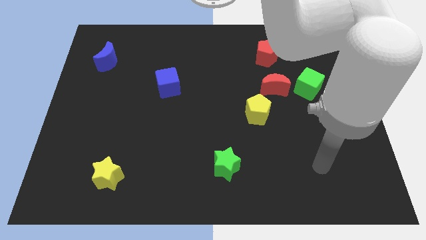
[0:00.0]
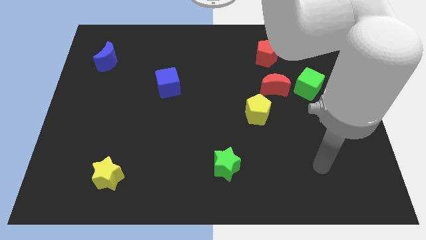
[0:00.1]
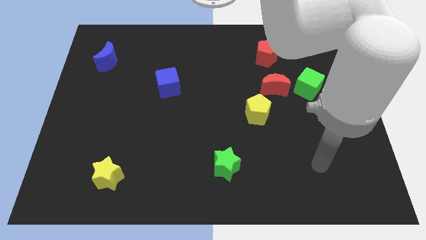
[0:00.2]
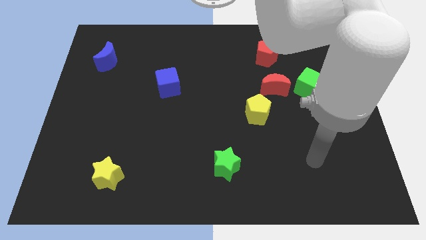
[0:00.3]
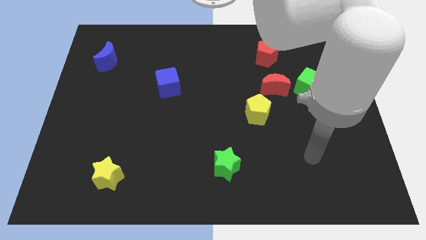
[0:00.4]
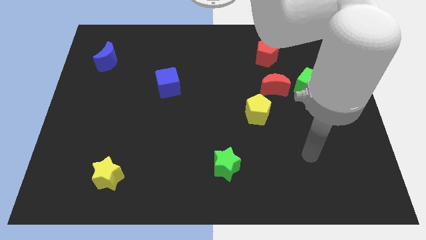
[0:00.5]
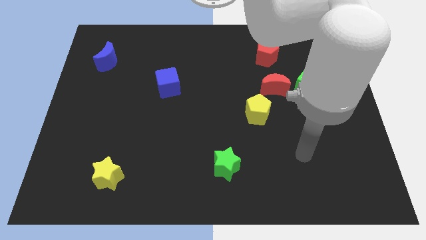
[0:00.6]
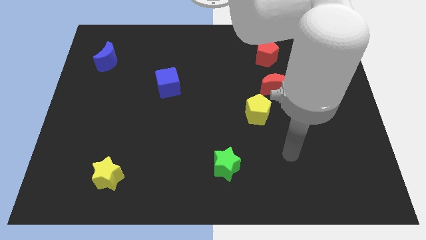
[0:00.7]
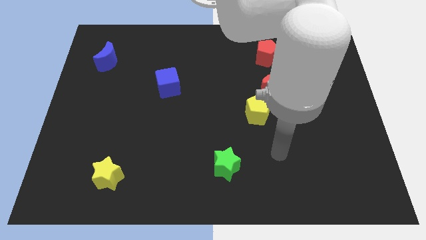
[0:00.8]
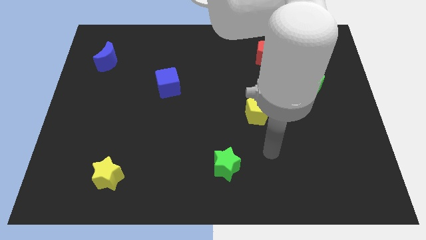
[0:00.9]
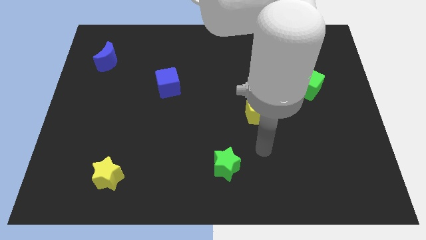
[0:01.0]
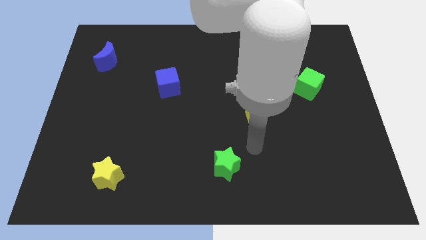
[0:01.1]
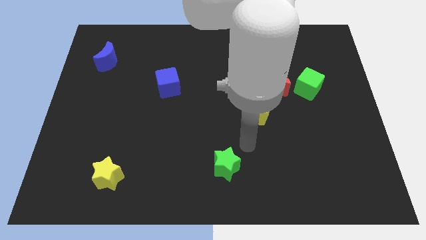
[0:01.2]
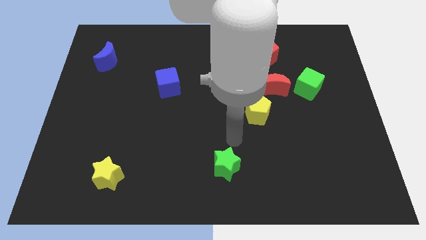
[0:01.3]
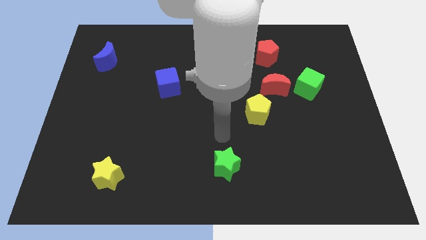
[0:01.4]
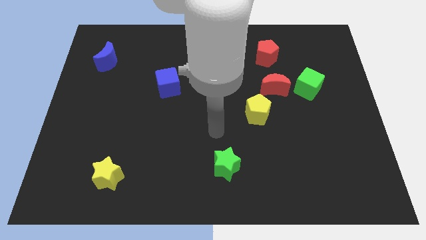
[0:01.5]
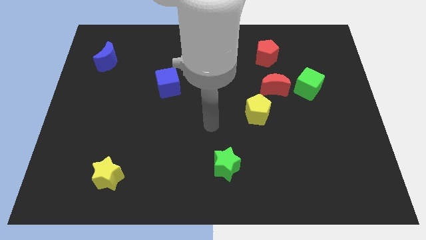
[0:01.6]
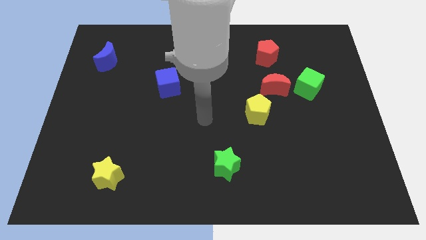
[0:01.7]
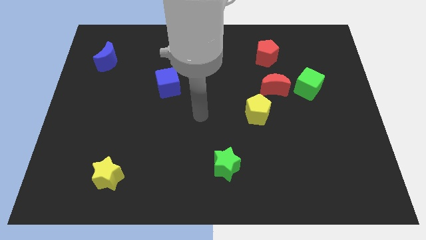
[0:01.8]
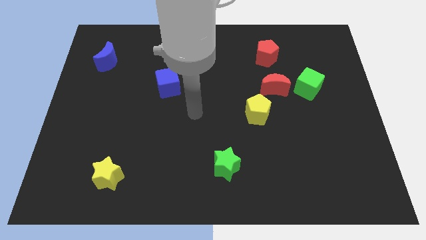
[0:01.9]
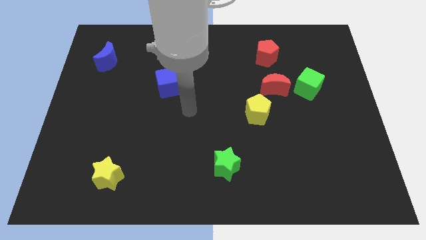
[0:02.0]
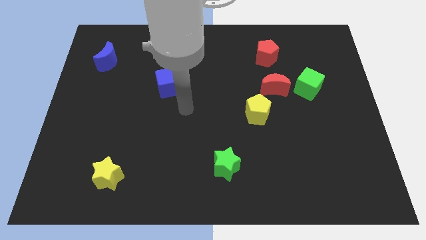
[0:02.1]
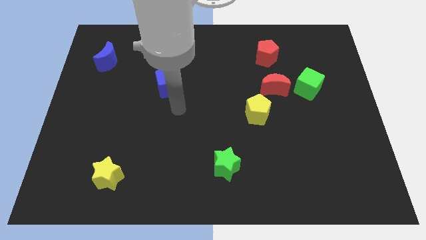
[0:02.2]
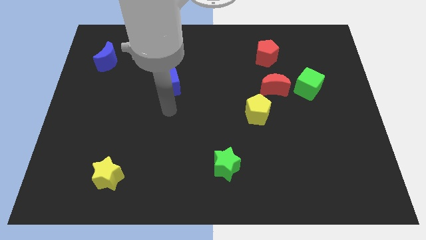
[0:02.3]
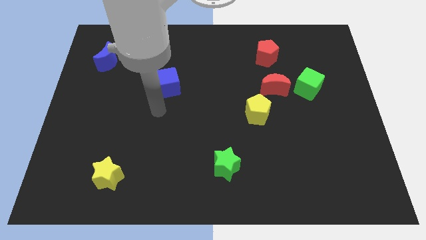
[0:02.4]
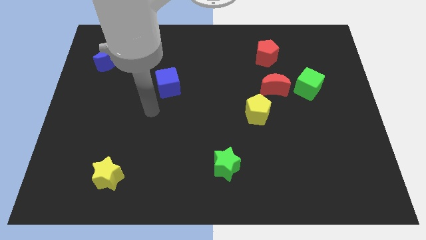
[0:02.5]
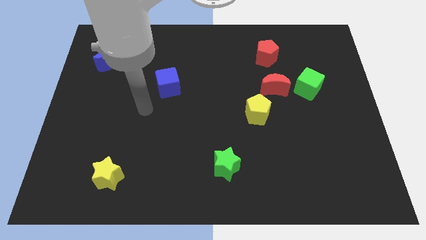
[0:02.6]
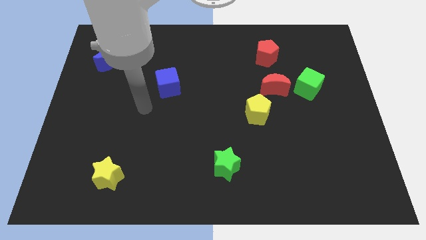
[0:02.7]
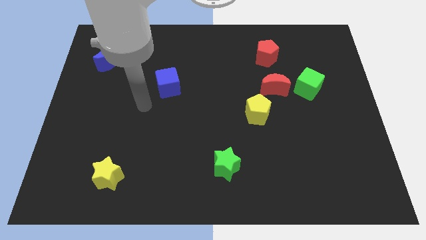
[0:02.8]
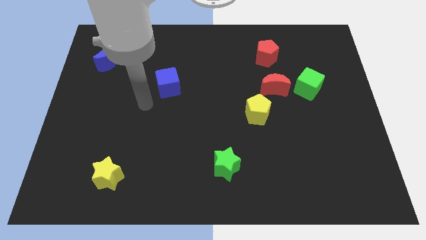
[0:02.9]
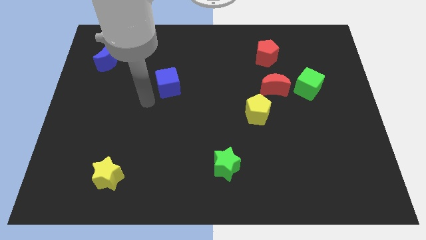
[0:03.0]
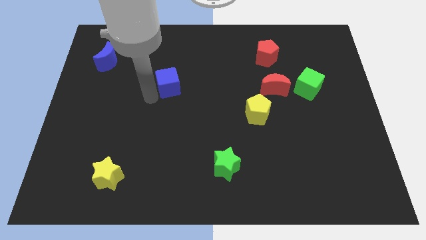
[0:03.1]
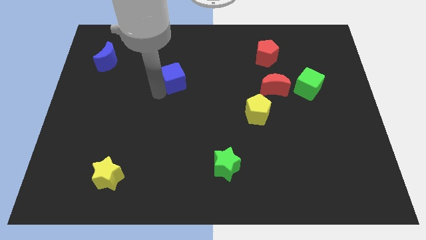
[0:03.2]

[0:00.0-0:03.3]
push the arm towards blue cube

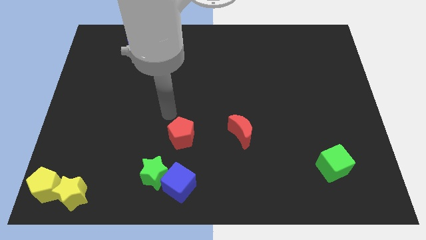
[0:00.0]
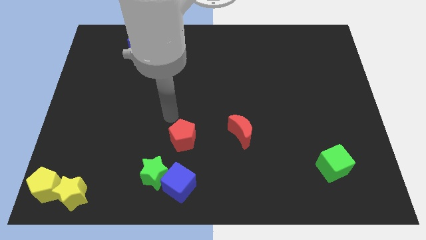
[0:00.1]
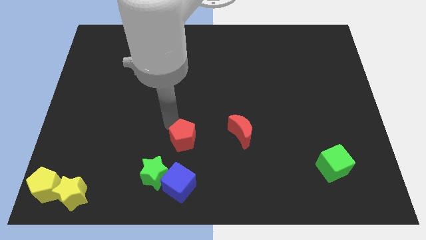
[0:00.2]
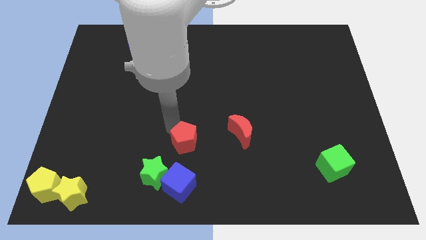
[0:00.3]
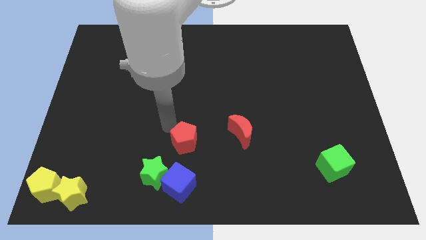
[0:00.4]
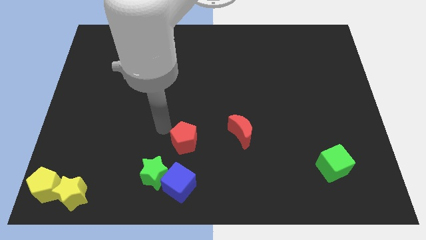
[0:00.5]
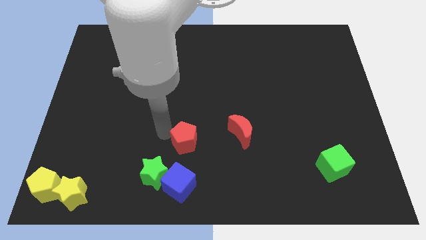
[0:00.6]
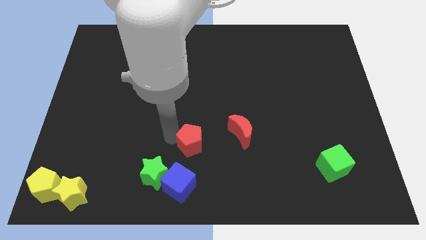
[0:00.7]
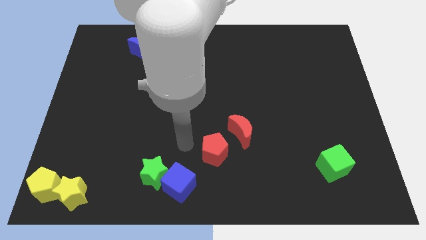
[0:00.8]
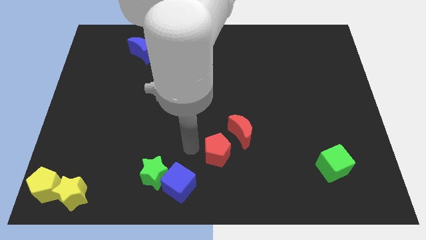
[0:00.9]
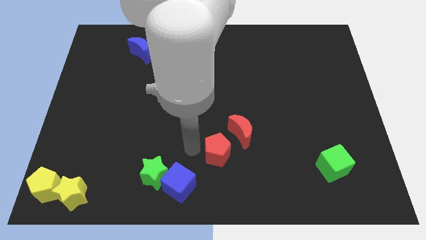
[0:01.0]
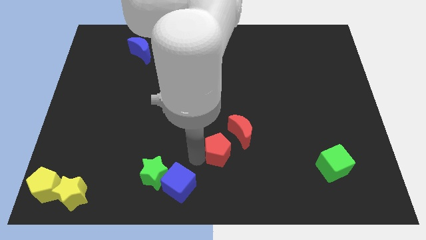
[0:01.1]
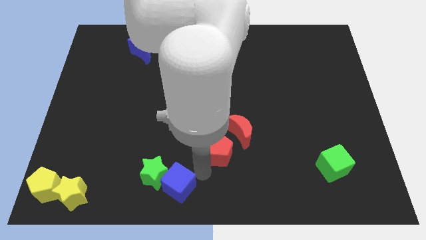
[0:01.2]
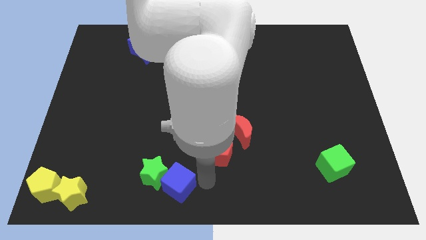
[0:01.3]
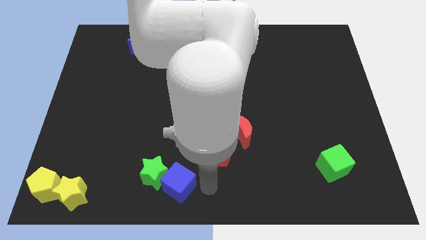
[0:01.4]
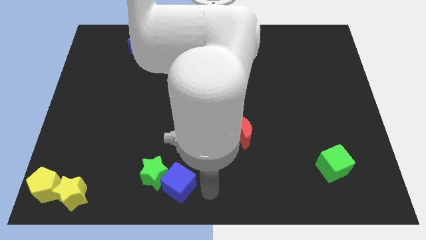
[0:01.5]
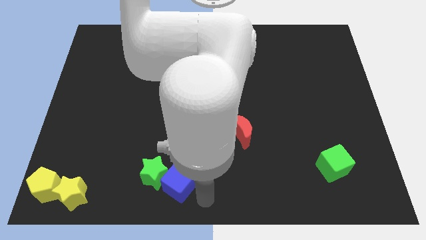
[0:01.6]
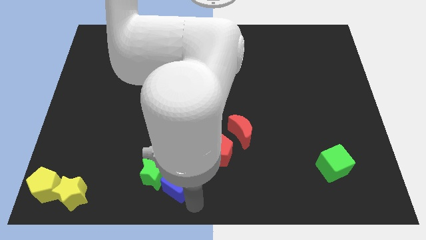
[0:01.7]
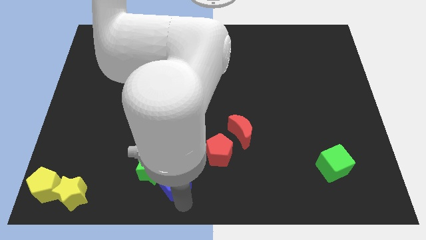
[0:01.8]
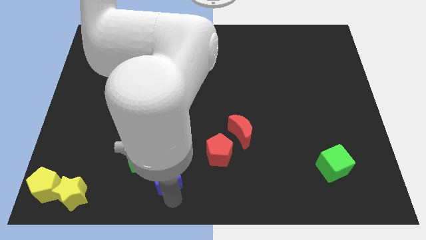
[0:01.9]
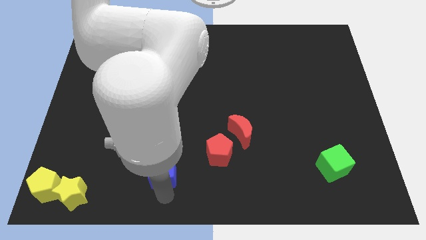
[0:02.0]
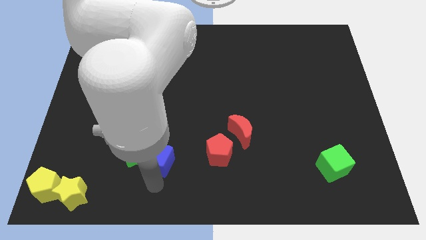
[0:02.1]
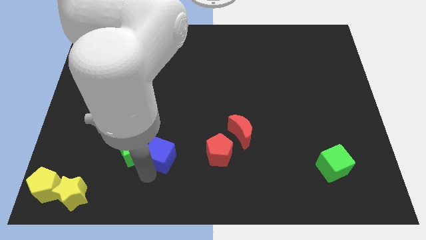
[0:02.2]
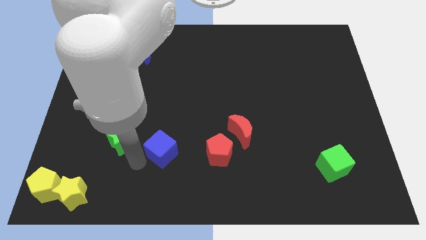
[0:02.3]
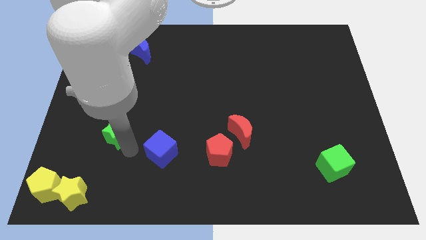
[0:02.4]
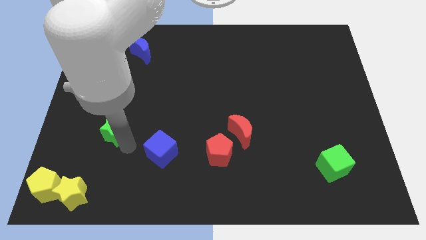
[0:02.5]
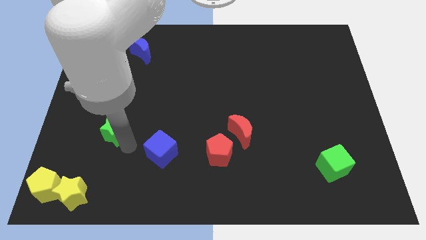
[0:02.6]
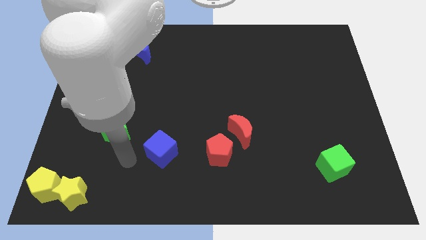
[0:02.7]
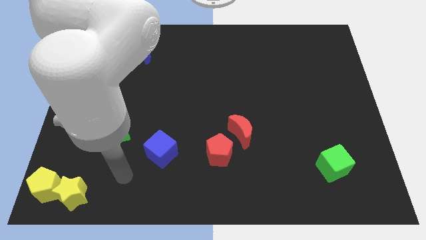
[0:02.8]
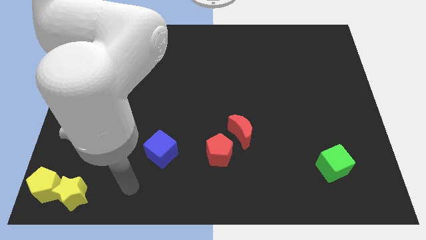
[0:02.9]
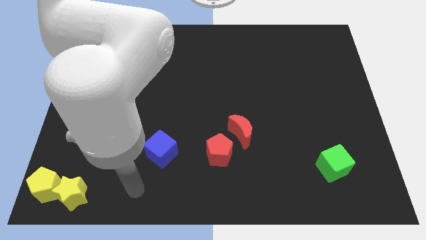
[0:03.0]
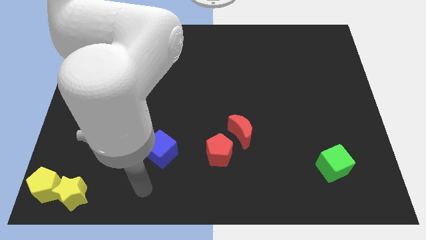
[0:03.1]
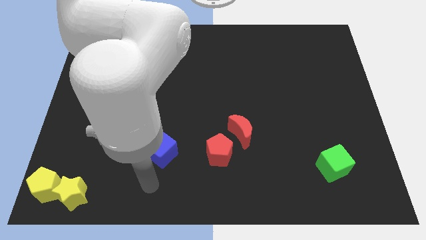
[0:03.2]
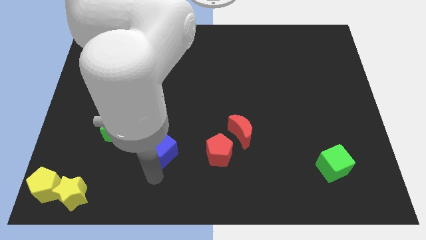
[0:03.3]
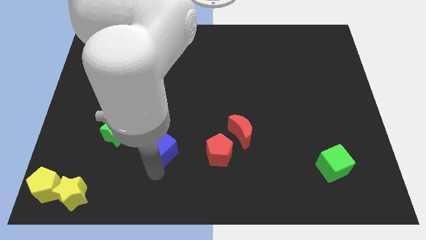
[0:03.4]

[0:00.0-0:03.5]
place blue cube to the left of red pentagon

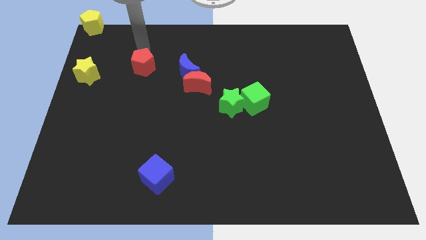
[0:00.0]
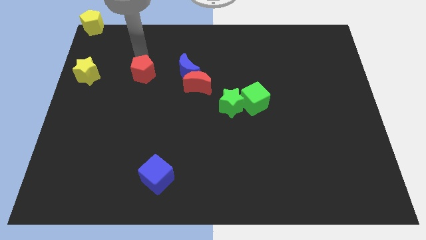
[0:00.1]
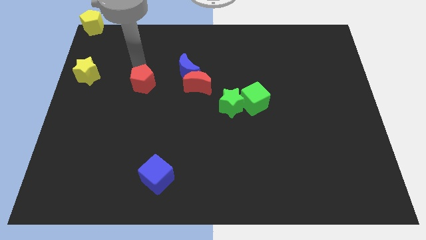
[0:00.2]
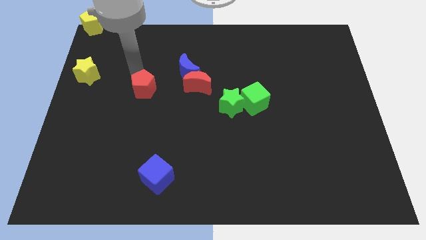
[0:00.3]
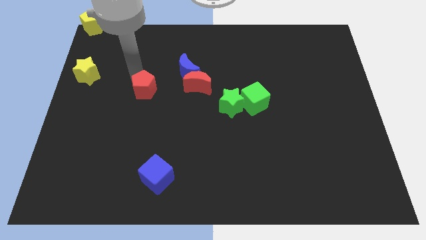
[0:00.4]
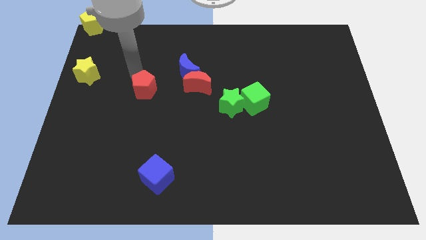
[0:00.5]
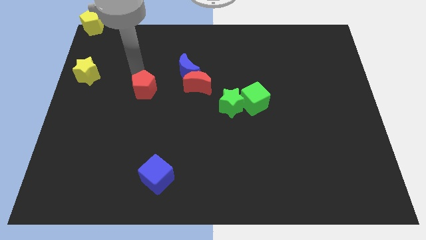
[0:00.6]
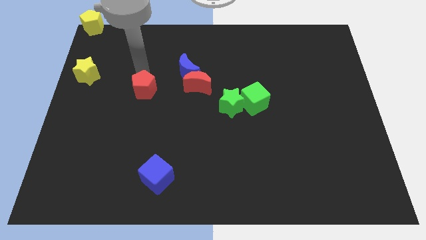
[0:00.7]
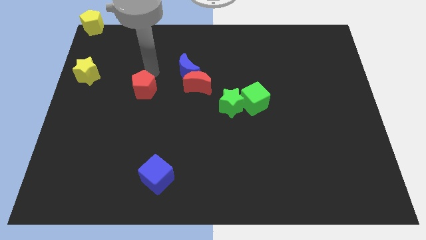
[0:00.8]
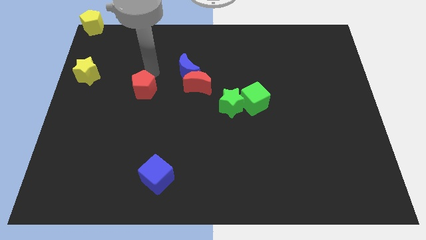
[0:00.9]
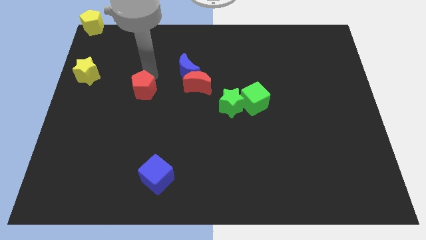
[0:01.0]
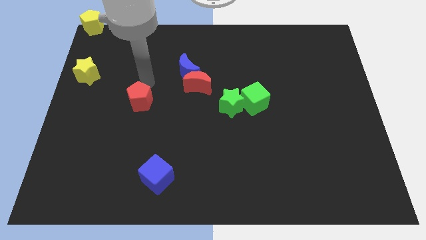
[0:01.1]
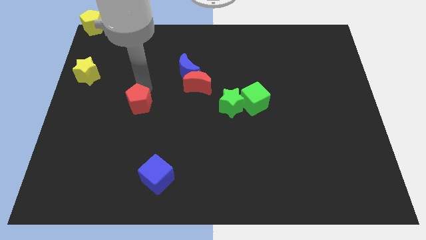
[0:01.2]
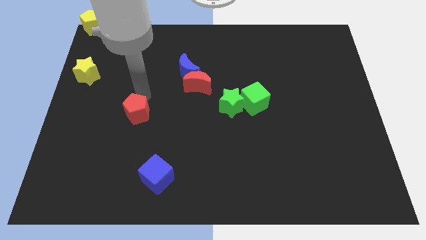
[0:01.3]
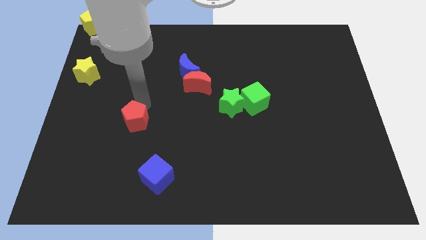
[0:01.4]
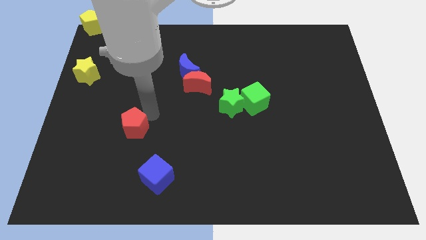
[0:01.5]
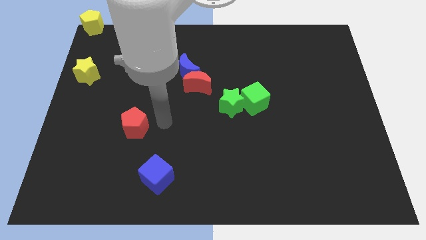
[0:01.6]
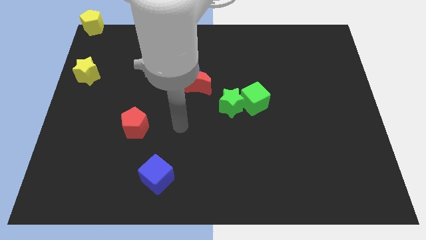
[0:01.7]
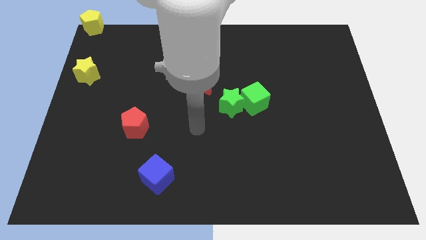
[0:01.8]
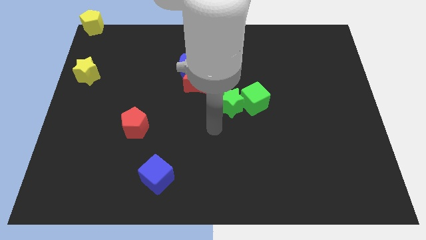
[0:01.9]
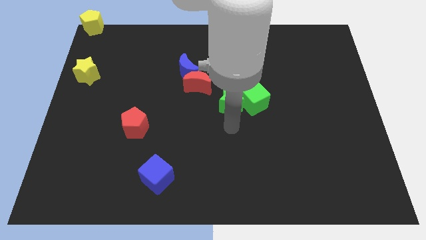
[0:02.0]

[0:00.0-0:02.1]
move the red pentagon towards left center of the board
